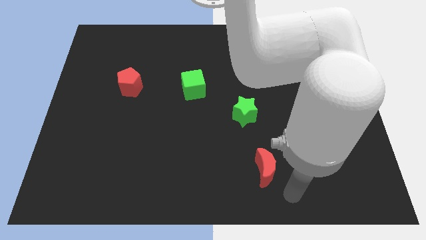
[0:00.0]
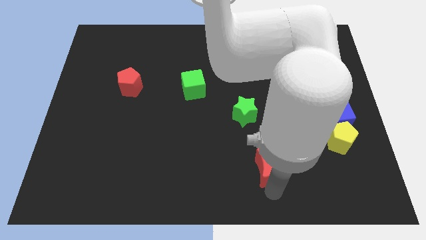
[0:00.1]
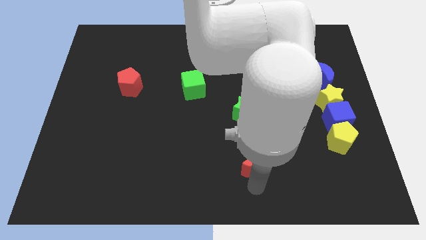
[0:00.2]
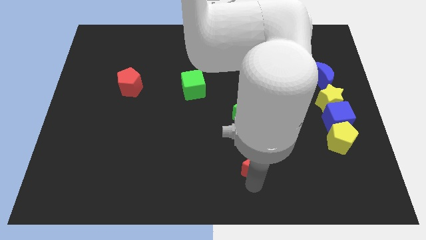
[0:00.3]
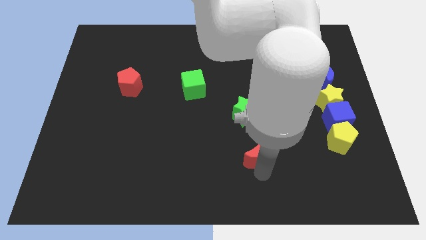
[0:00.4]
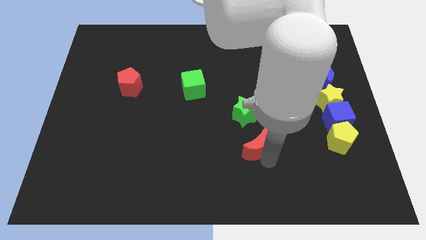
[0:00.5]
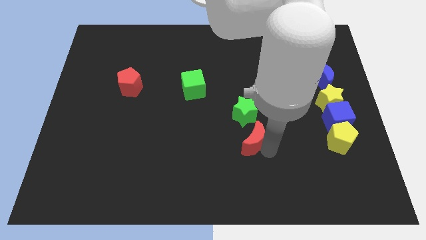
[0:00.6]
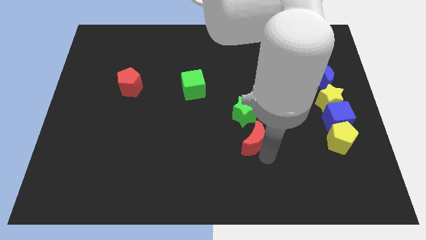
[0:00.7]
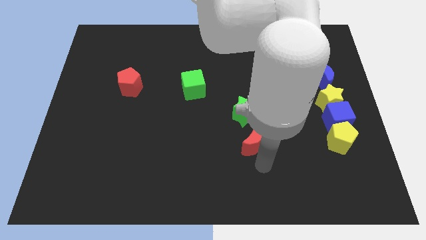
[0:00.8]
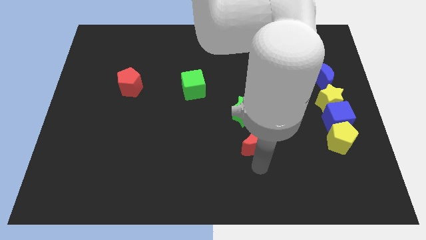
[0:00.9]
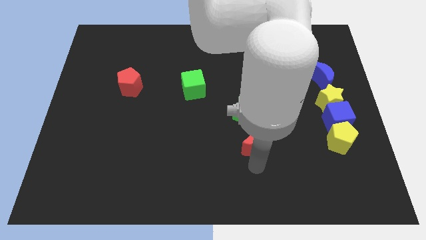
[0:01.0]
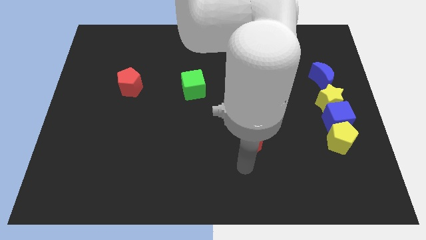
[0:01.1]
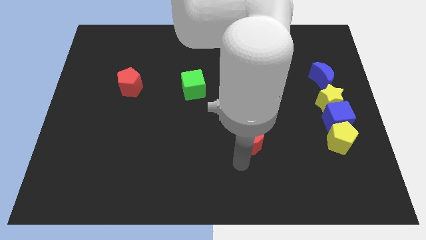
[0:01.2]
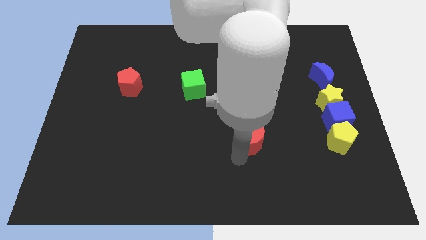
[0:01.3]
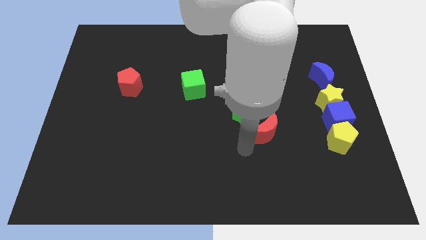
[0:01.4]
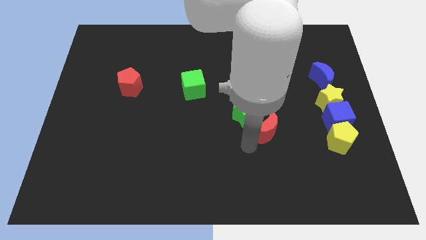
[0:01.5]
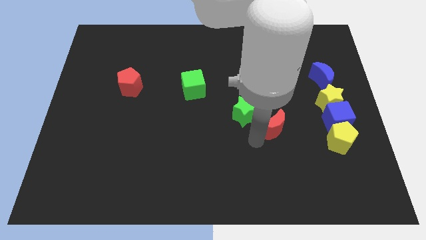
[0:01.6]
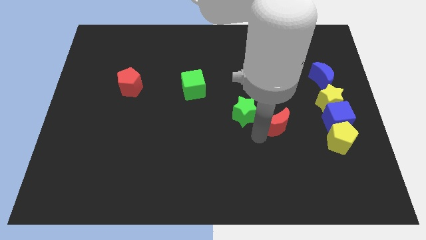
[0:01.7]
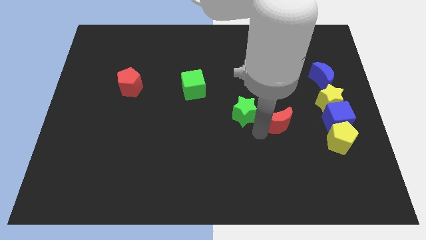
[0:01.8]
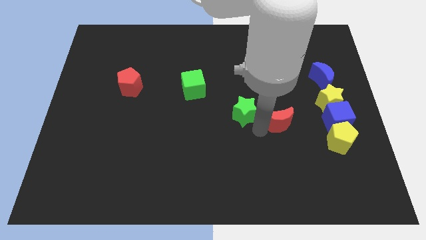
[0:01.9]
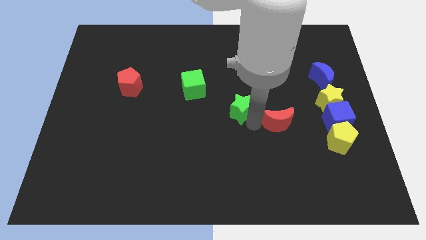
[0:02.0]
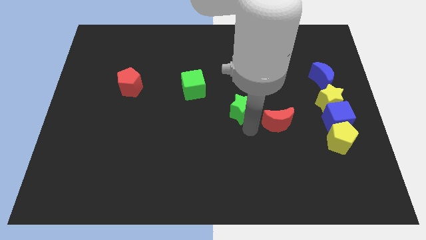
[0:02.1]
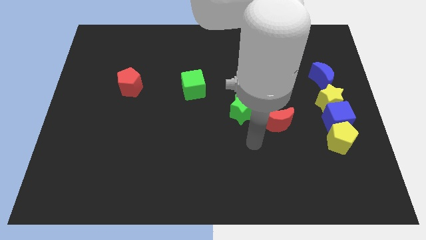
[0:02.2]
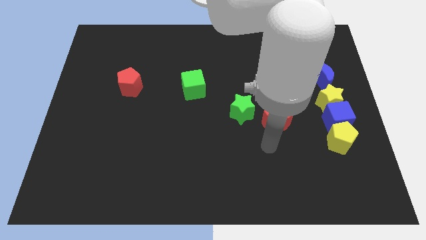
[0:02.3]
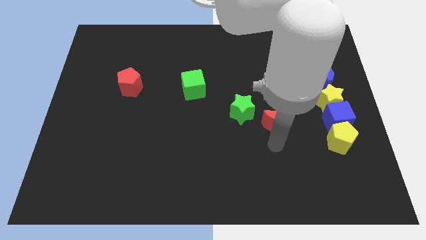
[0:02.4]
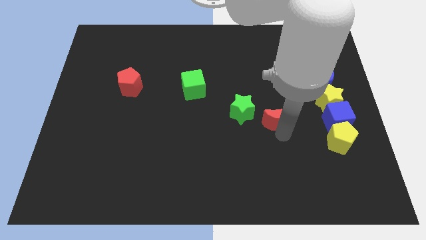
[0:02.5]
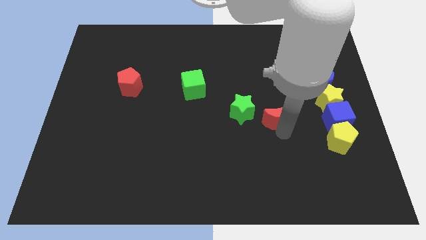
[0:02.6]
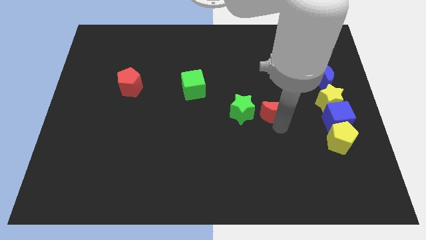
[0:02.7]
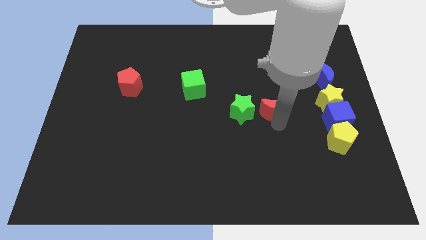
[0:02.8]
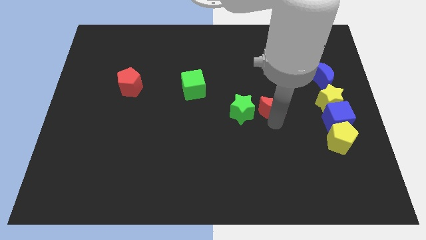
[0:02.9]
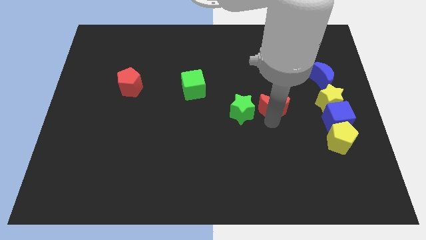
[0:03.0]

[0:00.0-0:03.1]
put the red moon in between the stars

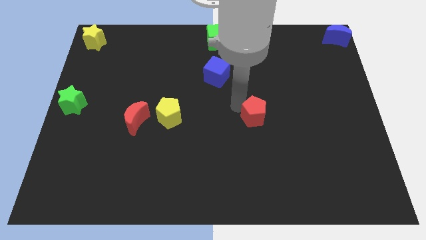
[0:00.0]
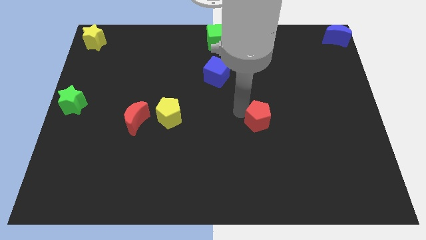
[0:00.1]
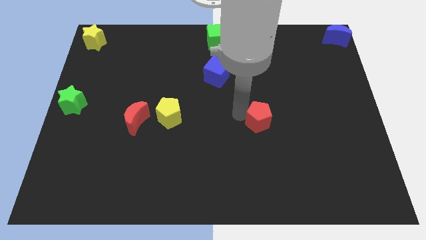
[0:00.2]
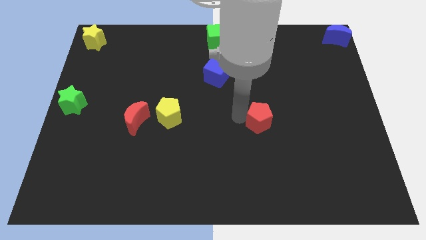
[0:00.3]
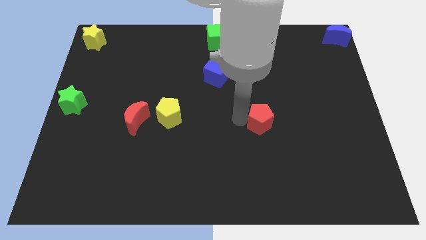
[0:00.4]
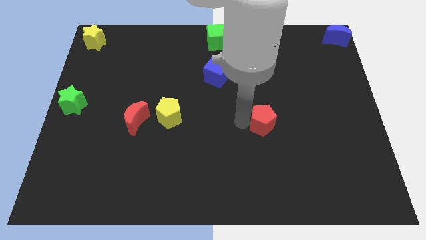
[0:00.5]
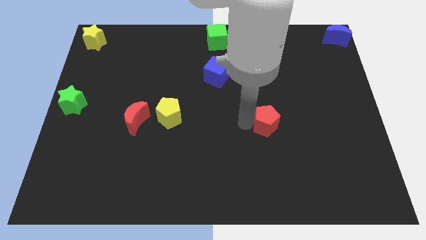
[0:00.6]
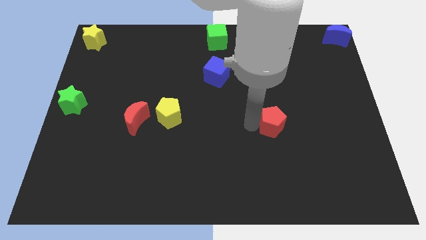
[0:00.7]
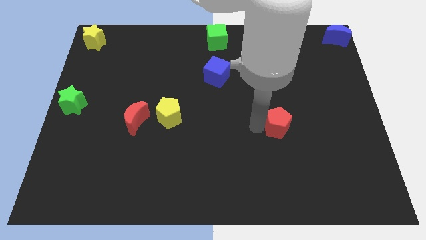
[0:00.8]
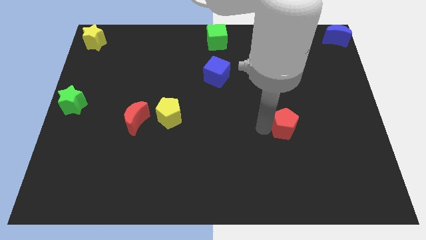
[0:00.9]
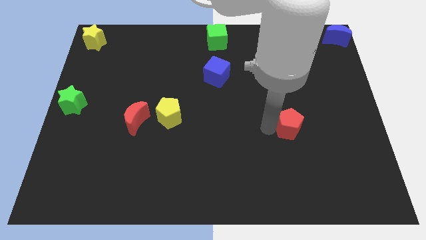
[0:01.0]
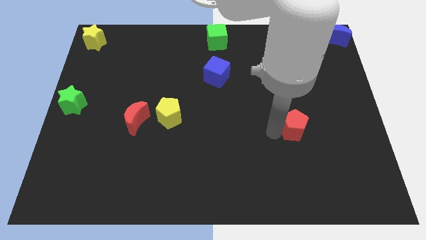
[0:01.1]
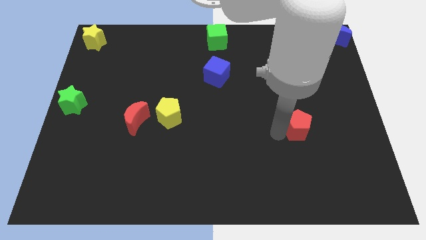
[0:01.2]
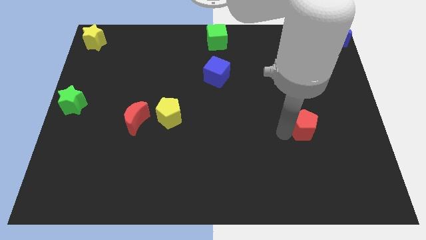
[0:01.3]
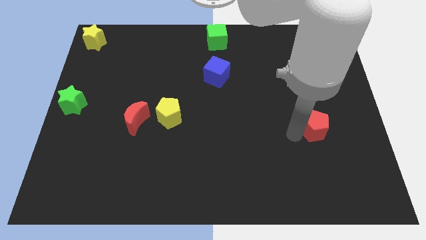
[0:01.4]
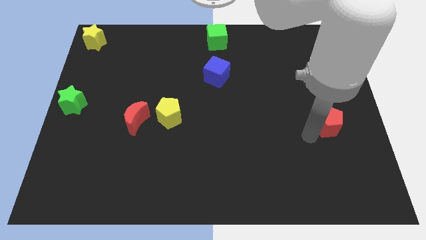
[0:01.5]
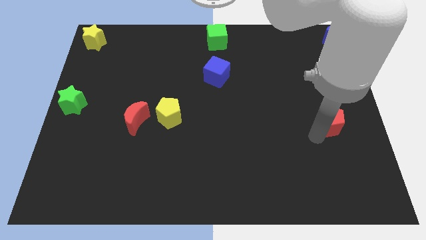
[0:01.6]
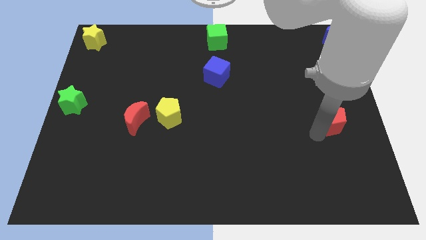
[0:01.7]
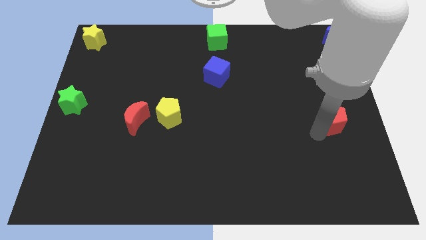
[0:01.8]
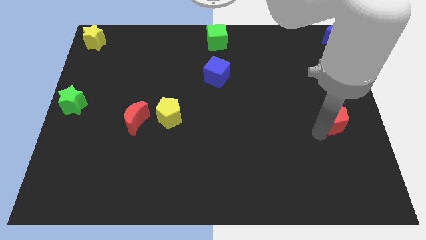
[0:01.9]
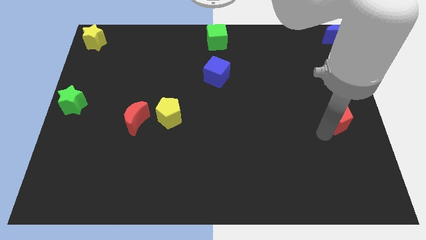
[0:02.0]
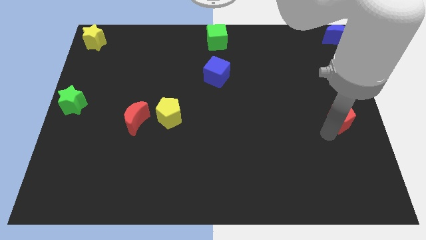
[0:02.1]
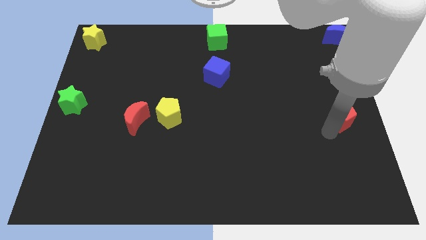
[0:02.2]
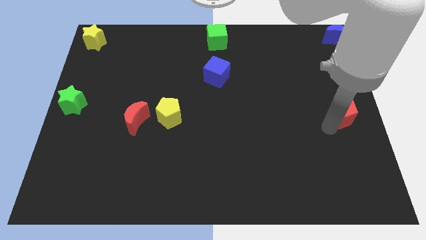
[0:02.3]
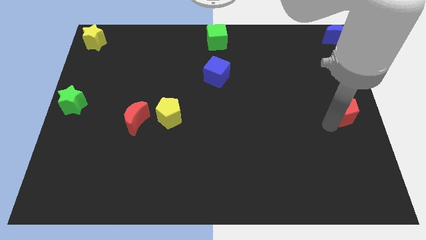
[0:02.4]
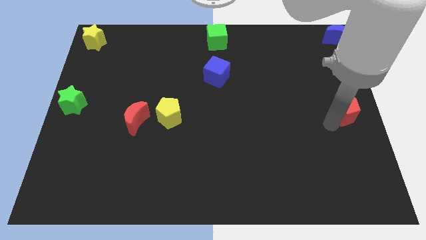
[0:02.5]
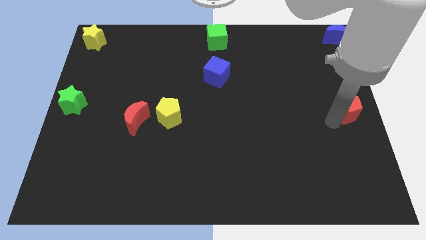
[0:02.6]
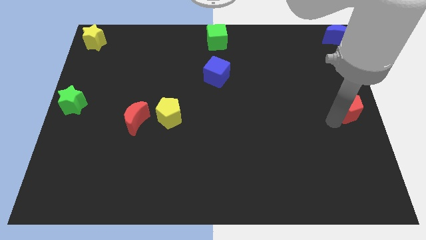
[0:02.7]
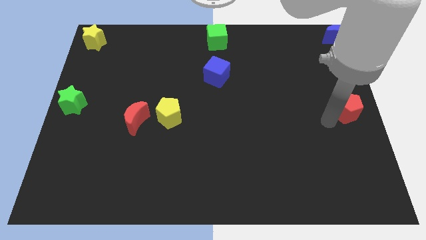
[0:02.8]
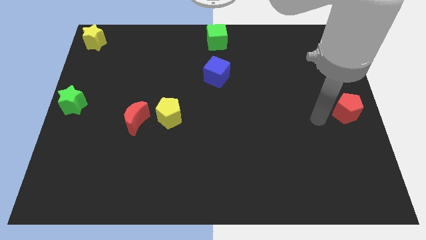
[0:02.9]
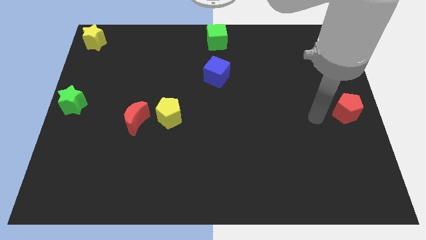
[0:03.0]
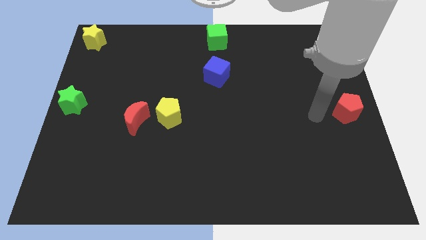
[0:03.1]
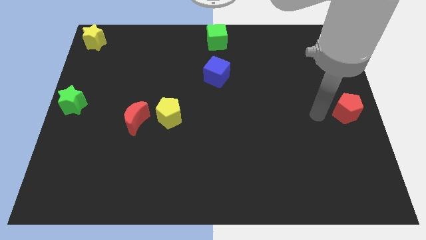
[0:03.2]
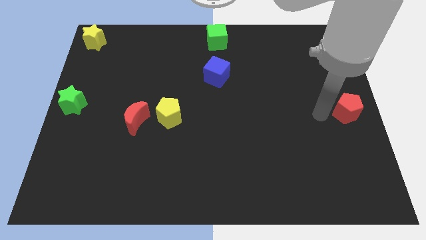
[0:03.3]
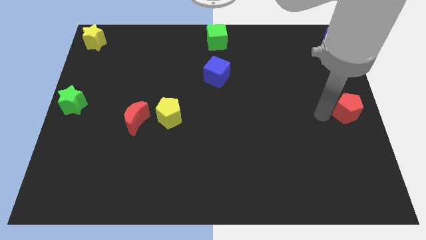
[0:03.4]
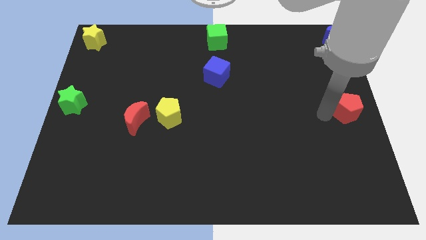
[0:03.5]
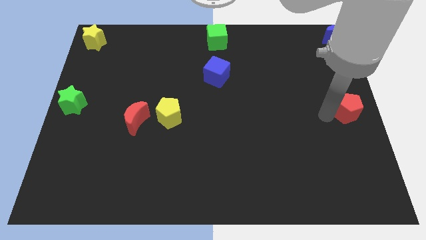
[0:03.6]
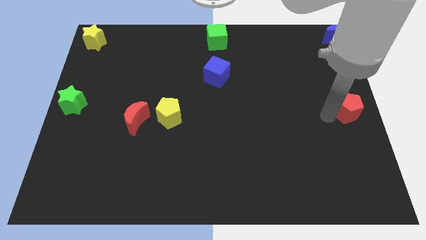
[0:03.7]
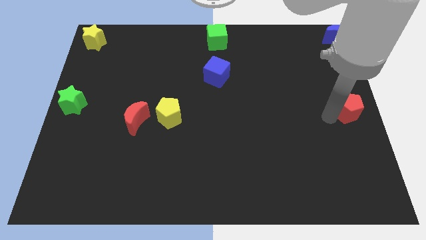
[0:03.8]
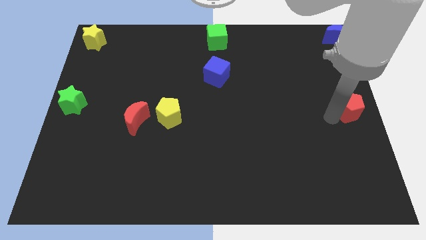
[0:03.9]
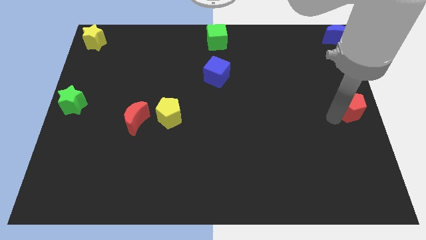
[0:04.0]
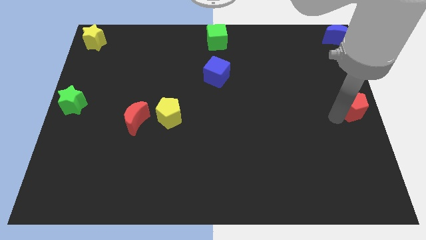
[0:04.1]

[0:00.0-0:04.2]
place the red pentagon to the middle right of the board

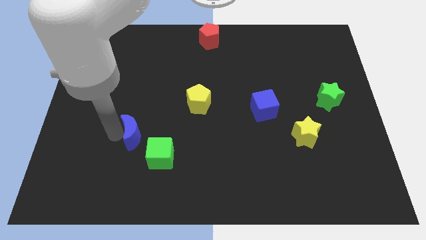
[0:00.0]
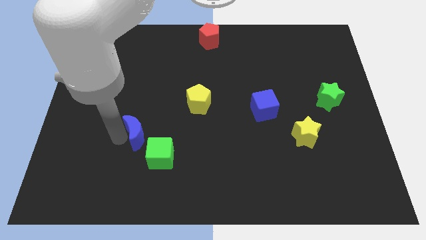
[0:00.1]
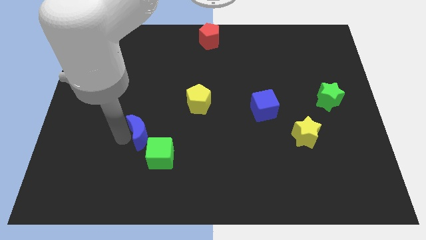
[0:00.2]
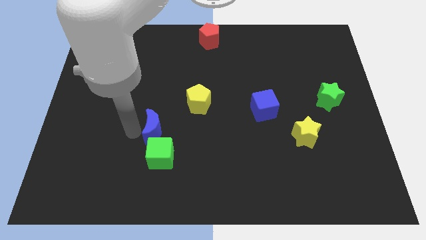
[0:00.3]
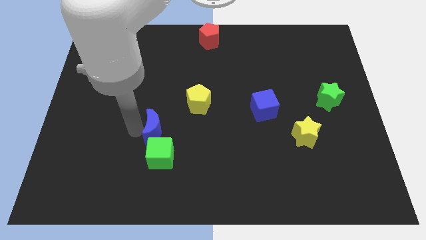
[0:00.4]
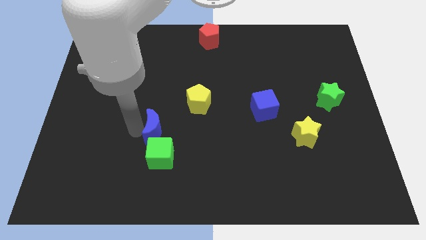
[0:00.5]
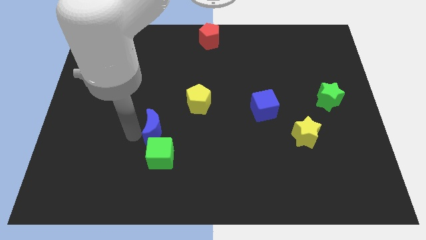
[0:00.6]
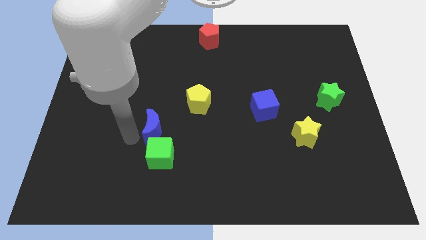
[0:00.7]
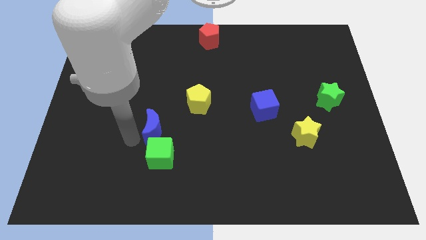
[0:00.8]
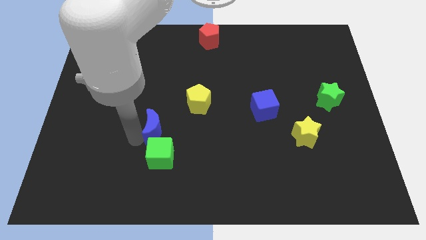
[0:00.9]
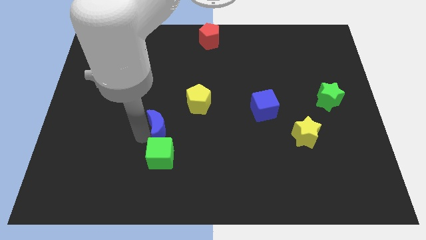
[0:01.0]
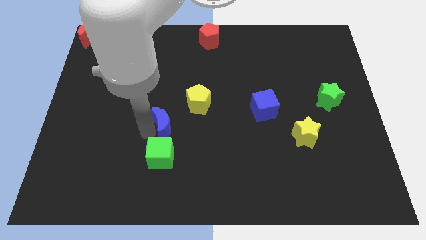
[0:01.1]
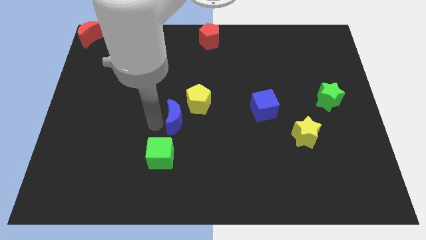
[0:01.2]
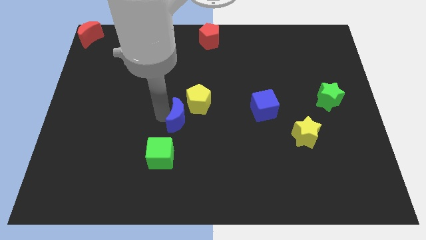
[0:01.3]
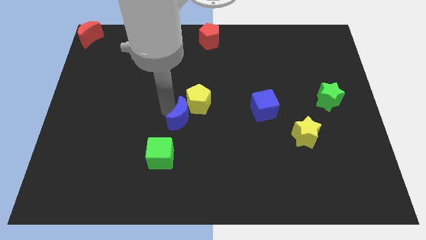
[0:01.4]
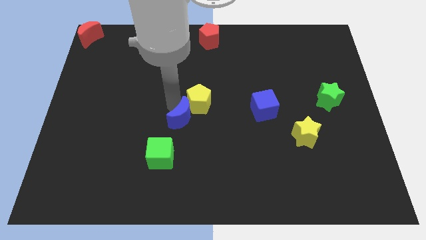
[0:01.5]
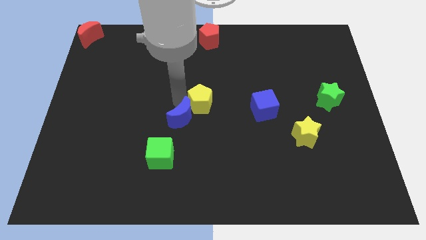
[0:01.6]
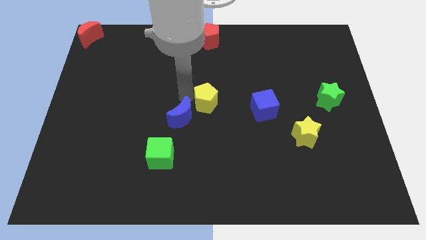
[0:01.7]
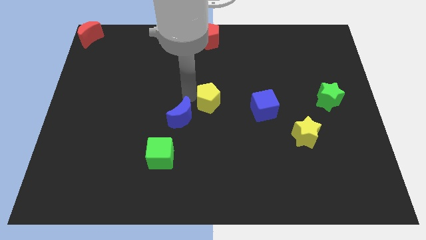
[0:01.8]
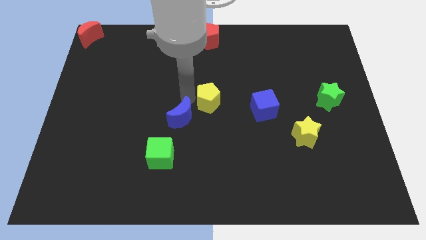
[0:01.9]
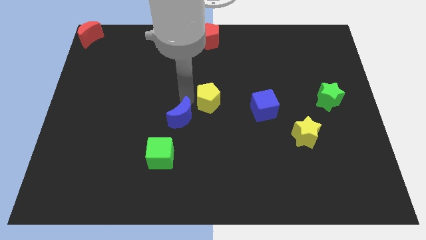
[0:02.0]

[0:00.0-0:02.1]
place the blue moon in between the yellow pentagon and green cube
